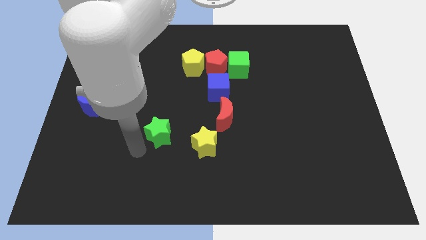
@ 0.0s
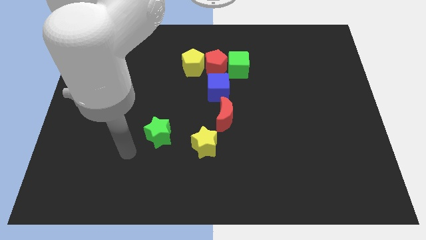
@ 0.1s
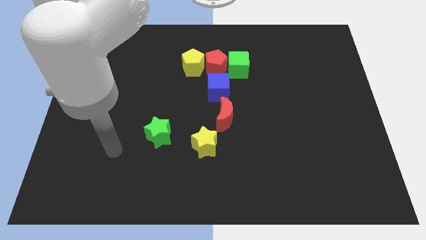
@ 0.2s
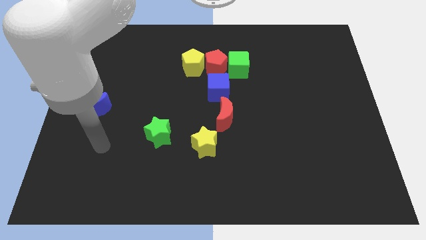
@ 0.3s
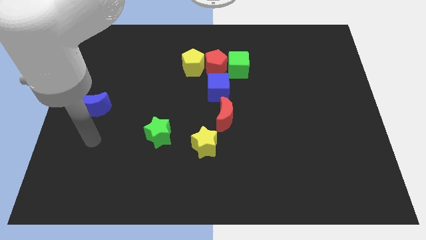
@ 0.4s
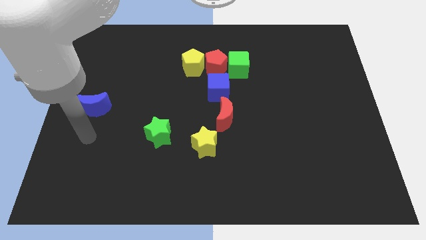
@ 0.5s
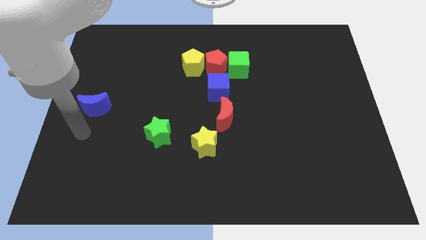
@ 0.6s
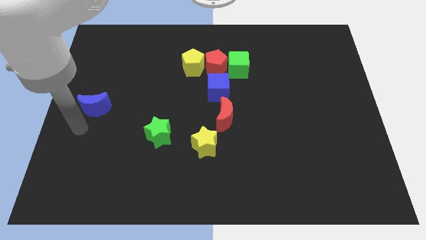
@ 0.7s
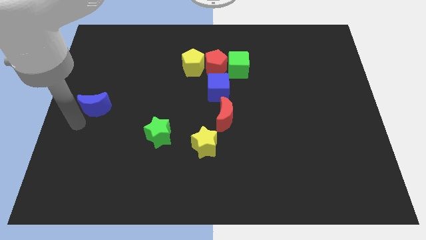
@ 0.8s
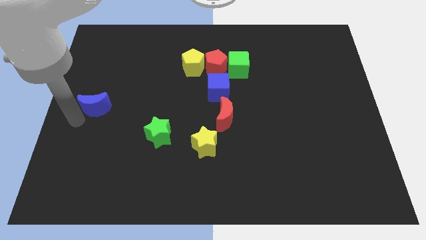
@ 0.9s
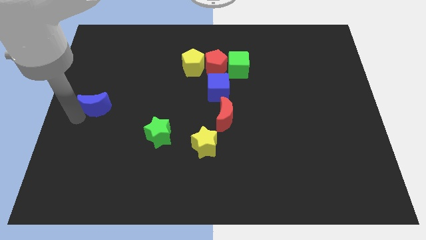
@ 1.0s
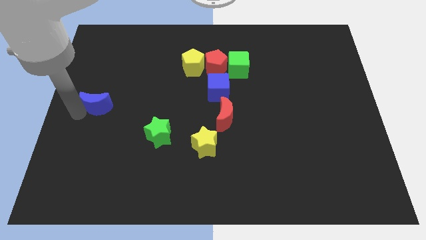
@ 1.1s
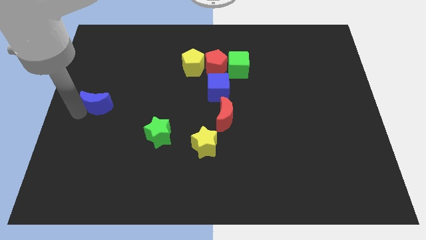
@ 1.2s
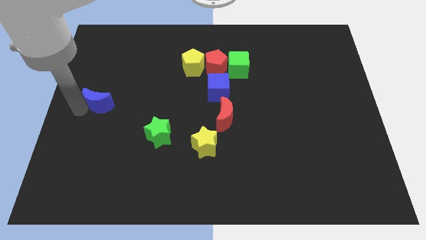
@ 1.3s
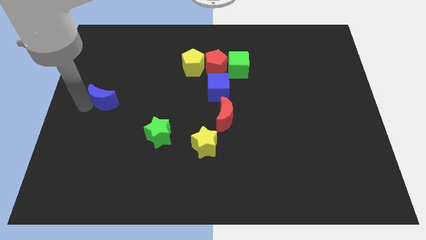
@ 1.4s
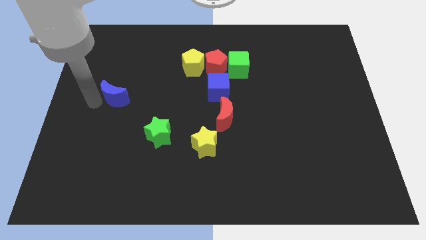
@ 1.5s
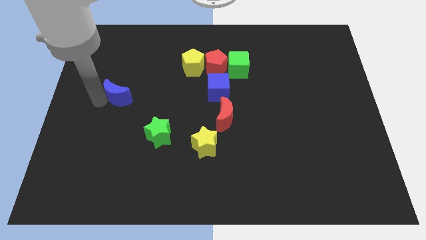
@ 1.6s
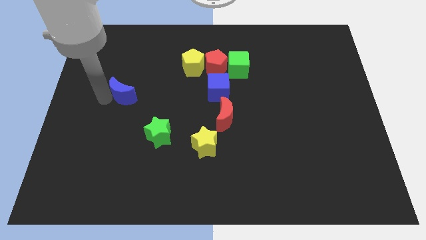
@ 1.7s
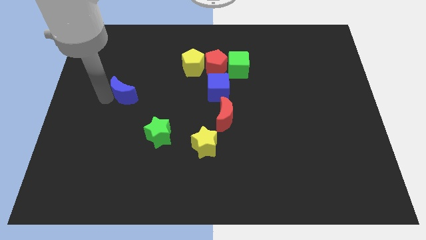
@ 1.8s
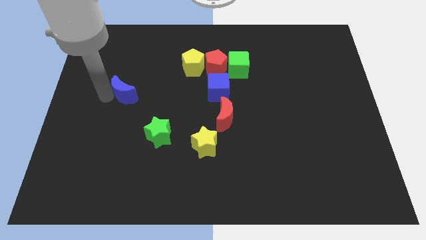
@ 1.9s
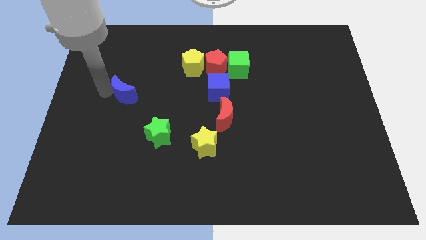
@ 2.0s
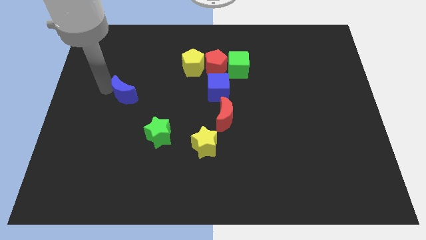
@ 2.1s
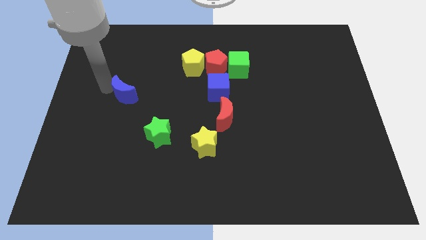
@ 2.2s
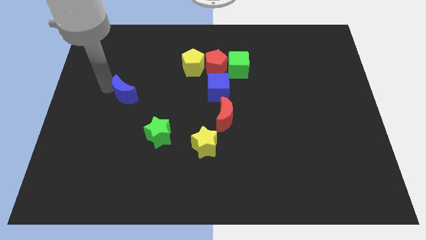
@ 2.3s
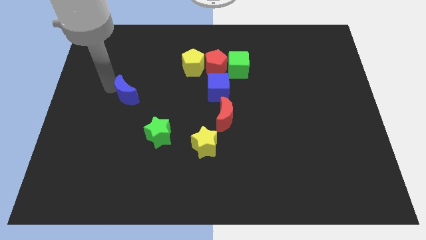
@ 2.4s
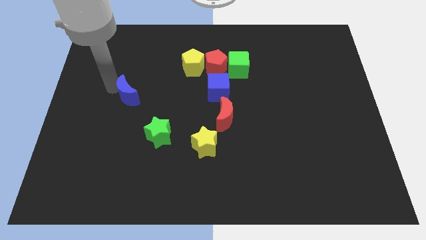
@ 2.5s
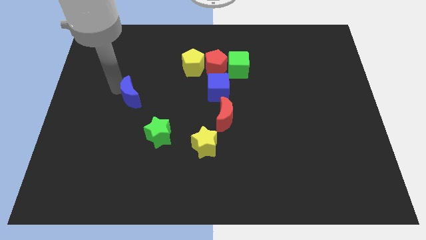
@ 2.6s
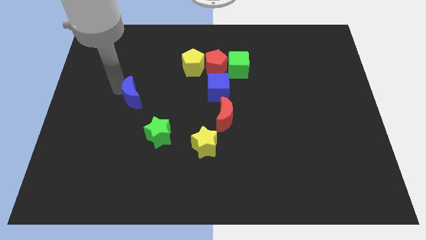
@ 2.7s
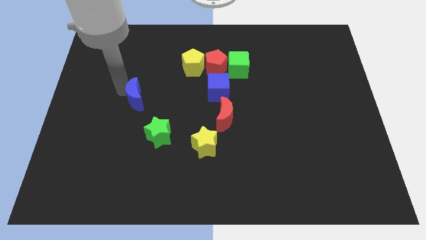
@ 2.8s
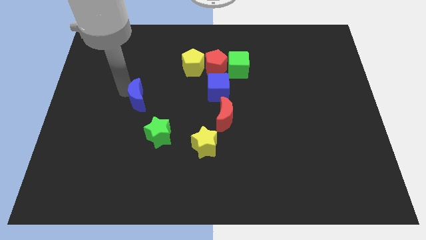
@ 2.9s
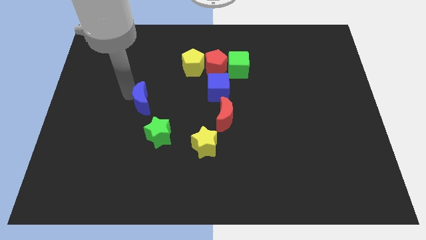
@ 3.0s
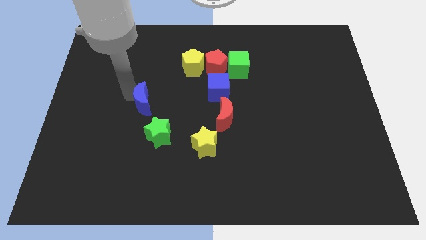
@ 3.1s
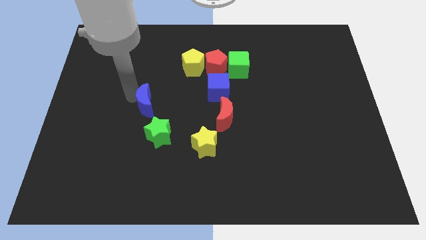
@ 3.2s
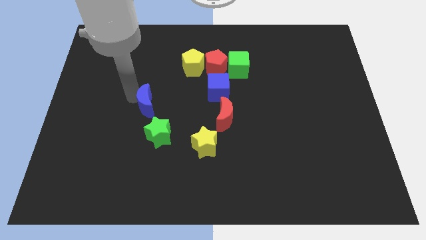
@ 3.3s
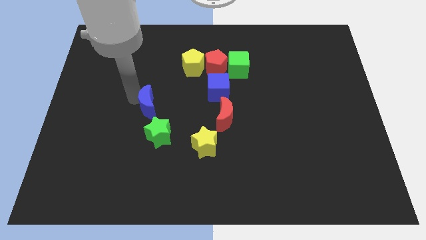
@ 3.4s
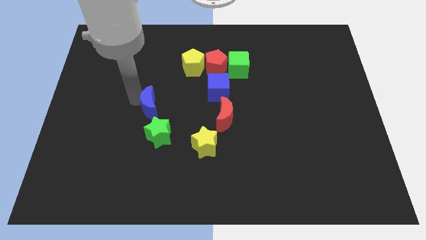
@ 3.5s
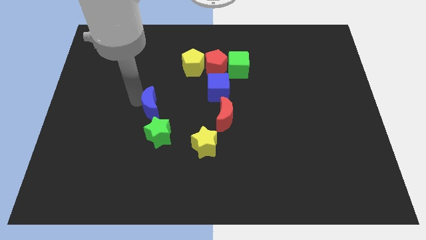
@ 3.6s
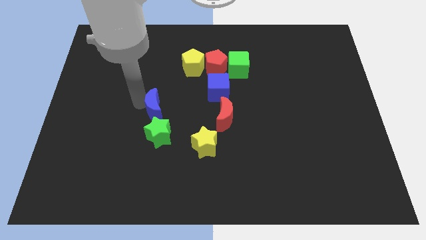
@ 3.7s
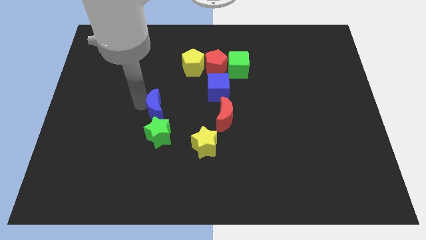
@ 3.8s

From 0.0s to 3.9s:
slide the blue moon into the green star

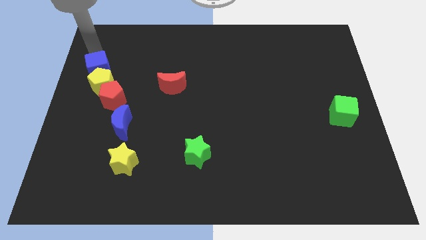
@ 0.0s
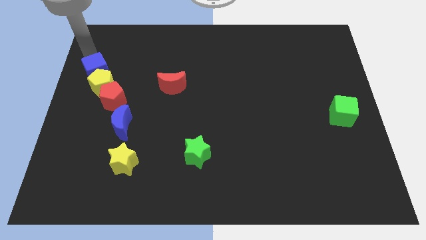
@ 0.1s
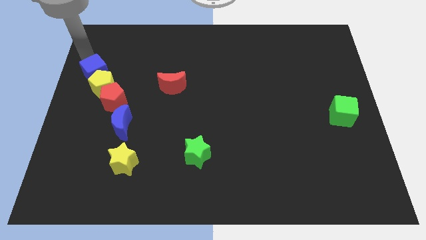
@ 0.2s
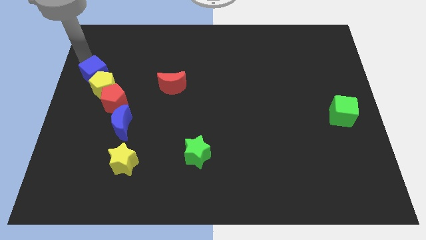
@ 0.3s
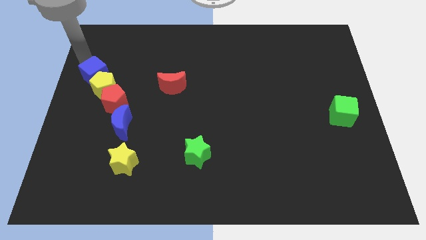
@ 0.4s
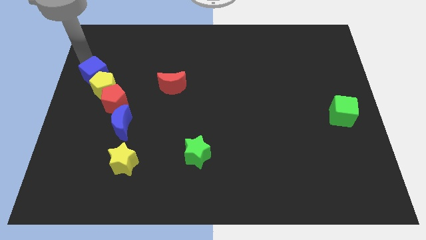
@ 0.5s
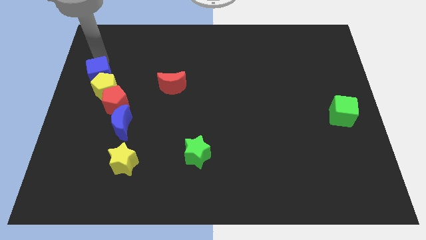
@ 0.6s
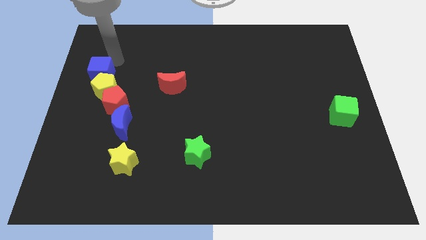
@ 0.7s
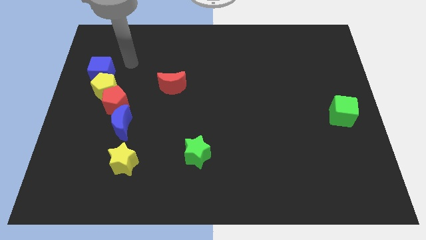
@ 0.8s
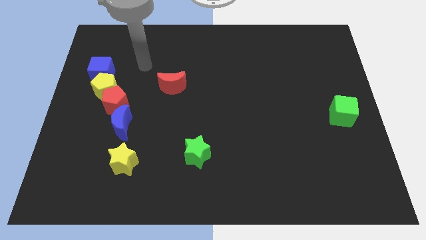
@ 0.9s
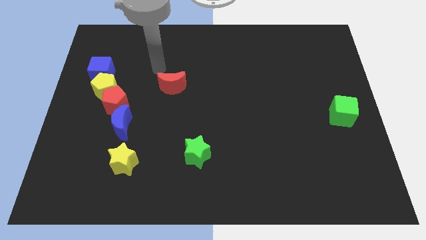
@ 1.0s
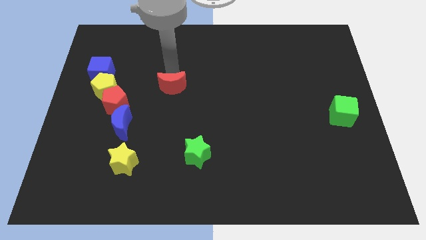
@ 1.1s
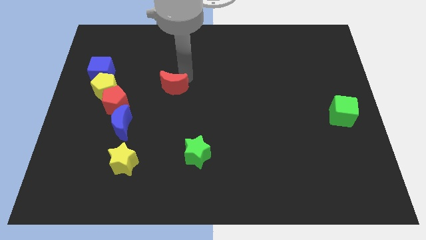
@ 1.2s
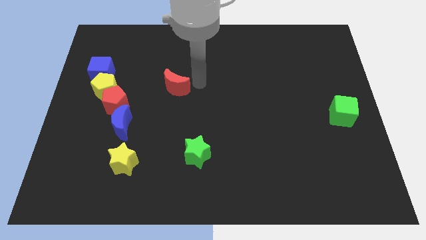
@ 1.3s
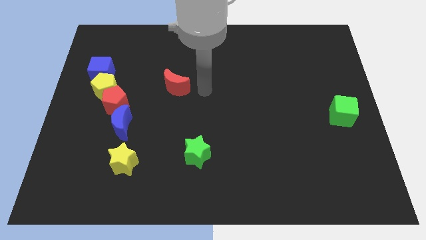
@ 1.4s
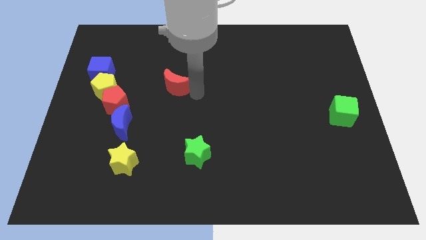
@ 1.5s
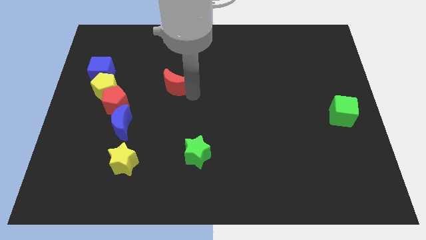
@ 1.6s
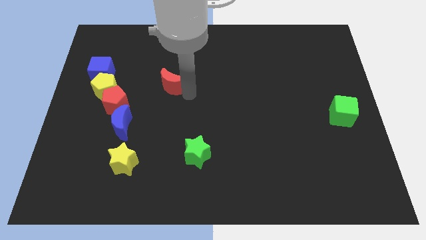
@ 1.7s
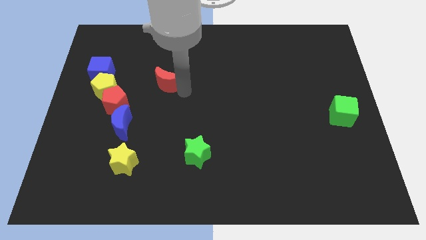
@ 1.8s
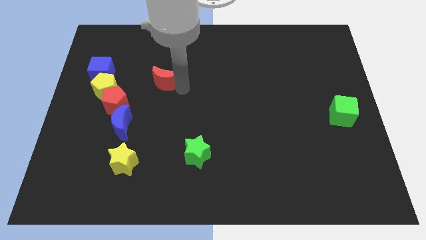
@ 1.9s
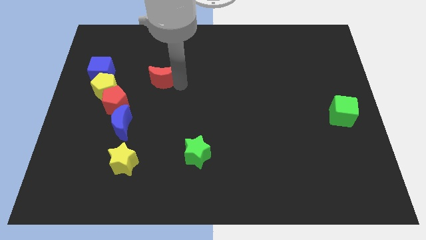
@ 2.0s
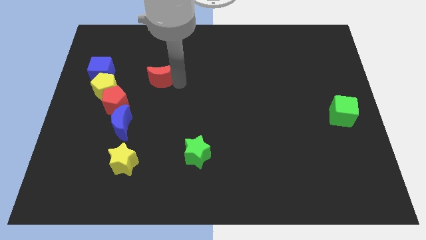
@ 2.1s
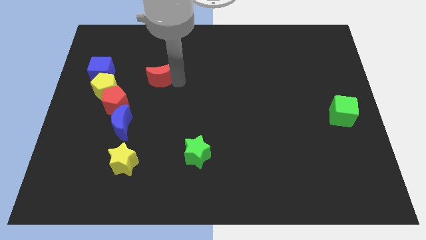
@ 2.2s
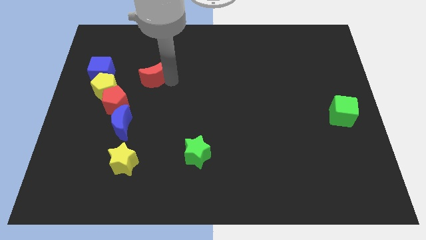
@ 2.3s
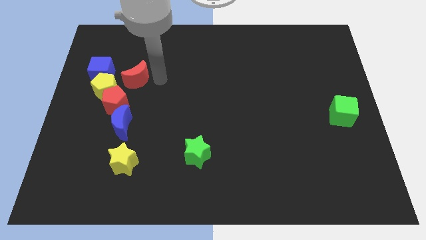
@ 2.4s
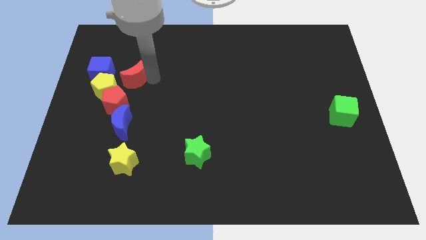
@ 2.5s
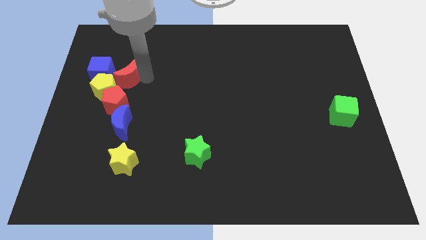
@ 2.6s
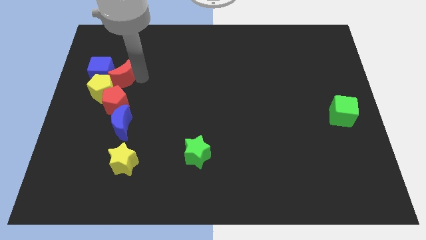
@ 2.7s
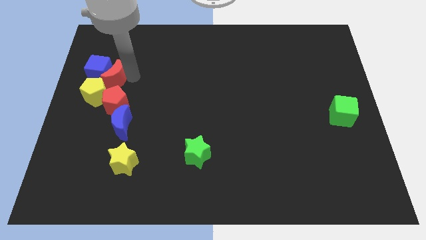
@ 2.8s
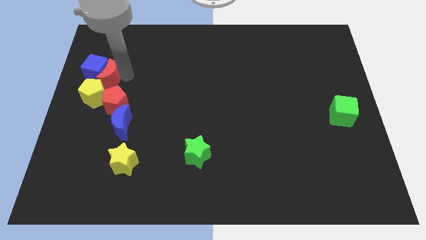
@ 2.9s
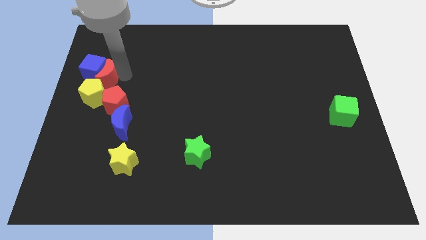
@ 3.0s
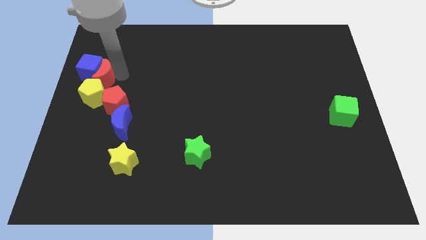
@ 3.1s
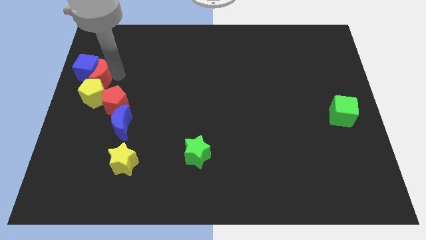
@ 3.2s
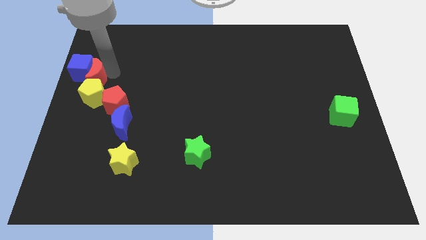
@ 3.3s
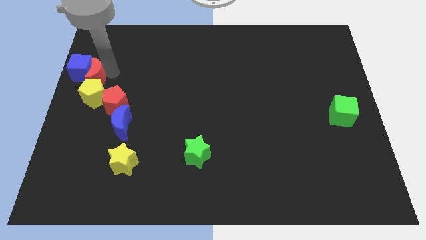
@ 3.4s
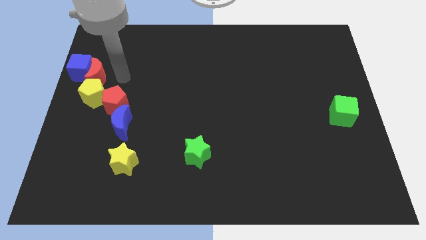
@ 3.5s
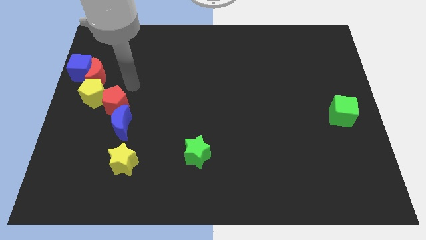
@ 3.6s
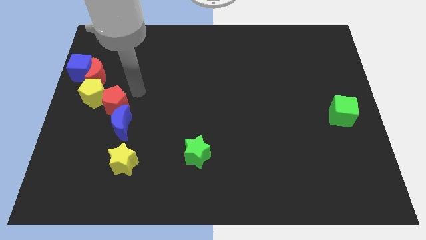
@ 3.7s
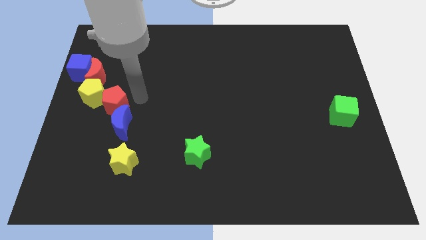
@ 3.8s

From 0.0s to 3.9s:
push the red crescent into the blue cube

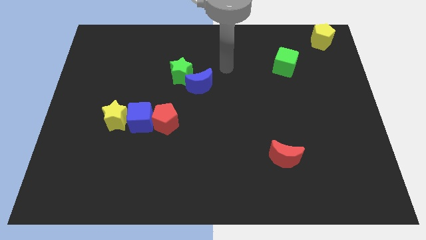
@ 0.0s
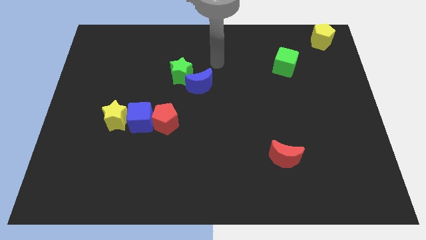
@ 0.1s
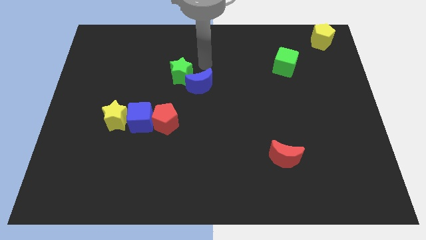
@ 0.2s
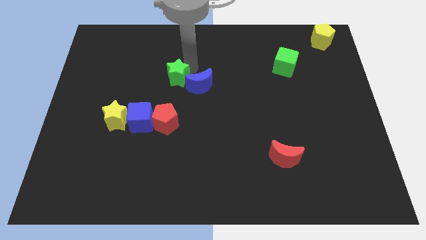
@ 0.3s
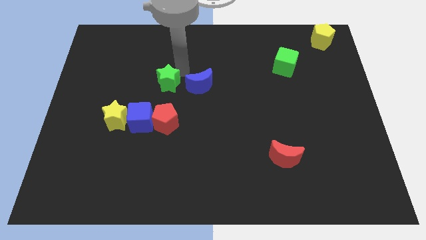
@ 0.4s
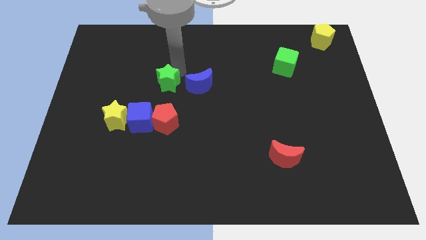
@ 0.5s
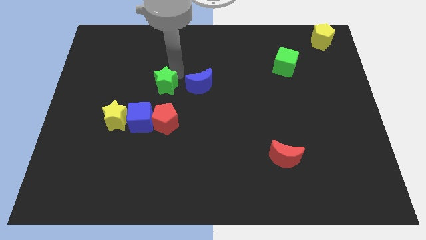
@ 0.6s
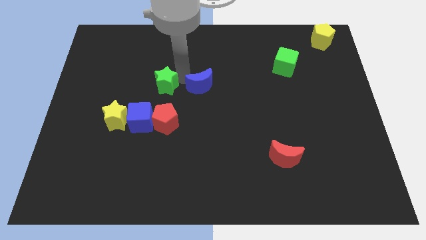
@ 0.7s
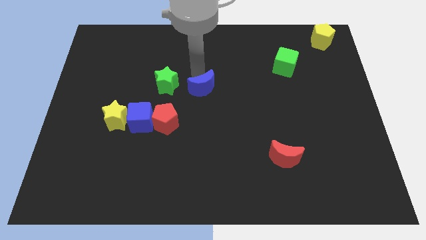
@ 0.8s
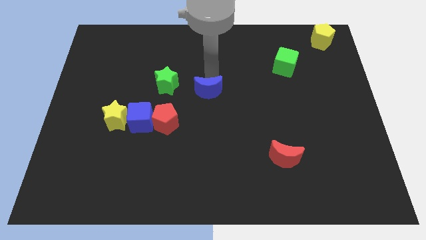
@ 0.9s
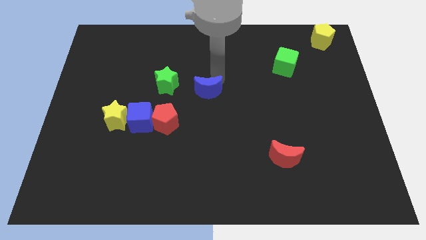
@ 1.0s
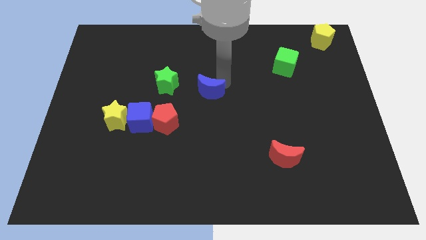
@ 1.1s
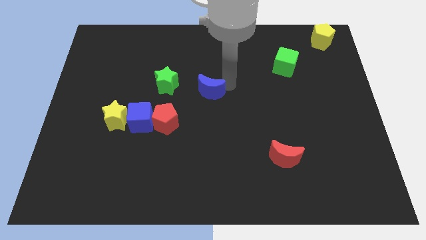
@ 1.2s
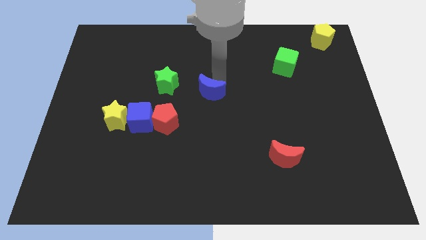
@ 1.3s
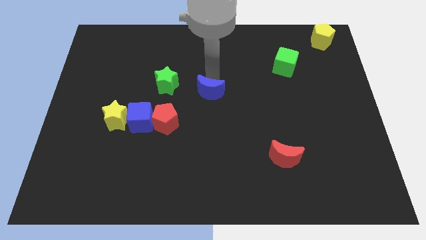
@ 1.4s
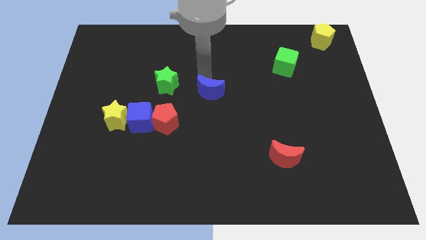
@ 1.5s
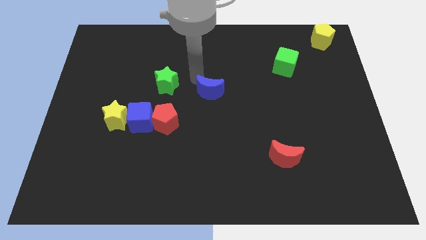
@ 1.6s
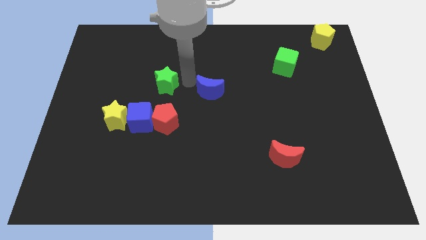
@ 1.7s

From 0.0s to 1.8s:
separate the green star and blue crescent
